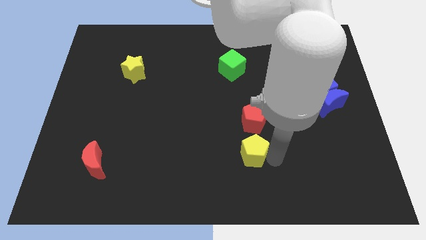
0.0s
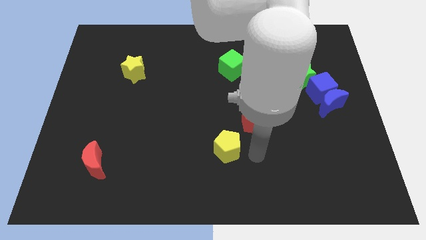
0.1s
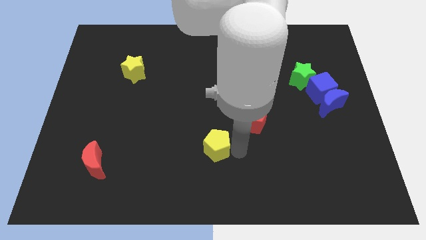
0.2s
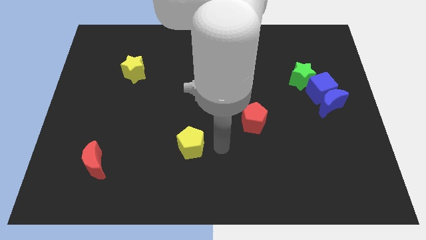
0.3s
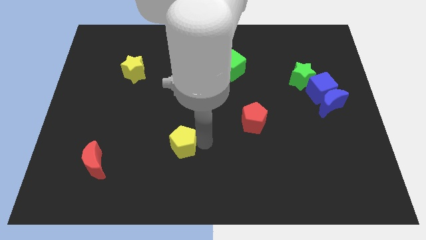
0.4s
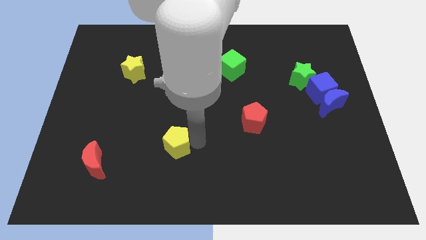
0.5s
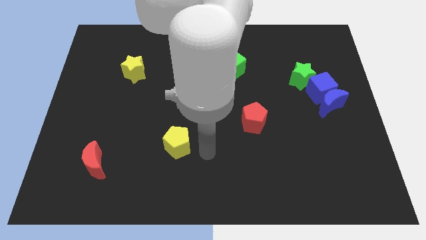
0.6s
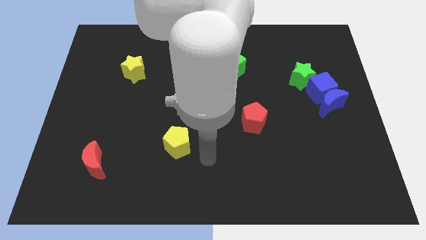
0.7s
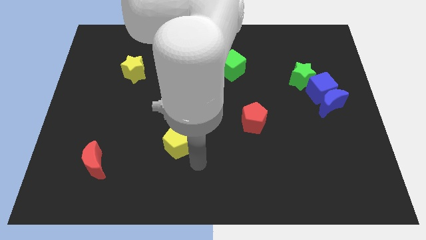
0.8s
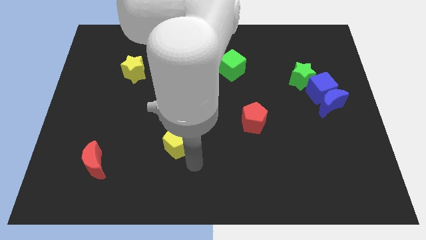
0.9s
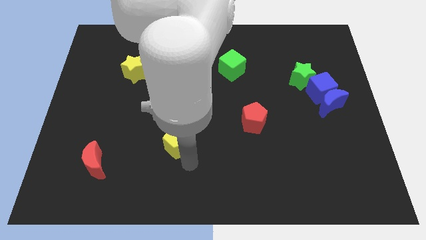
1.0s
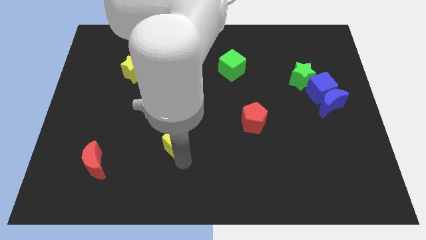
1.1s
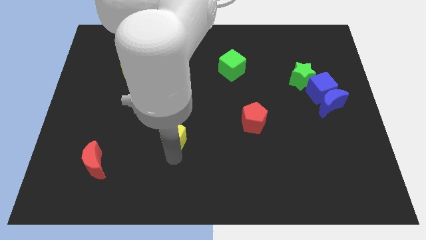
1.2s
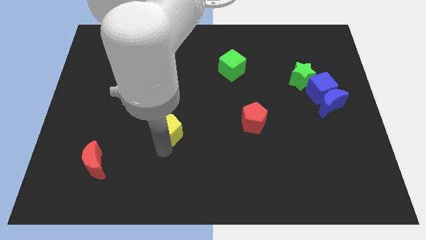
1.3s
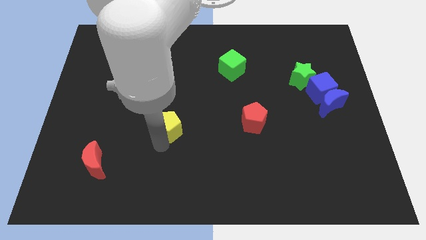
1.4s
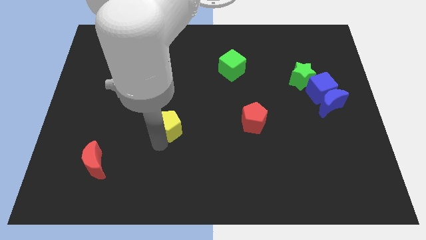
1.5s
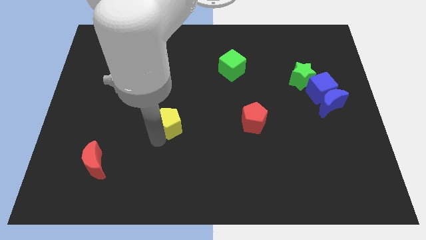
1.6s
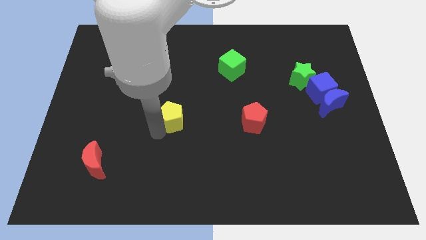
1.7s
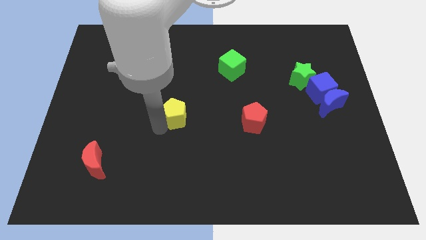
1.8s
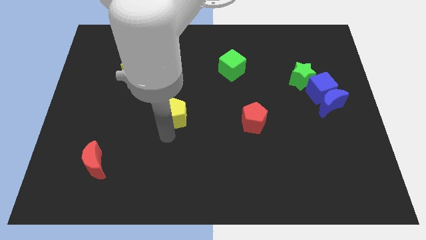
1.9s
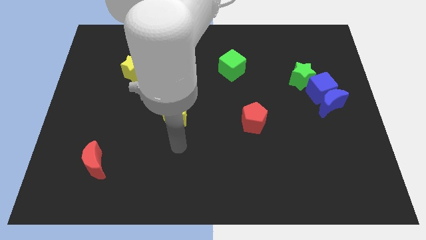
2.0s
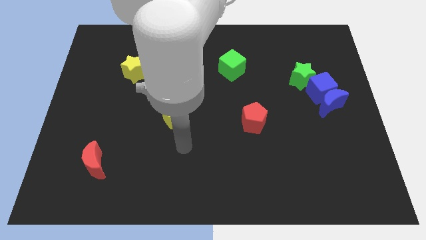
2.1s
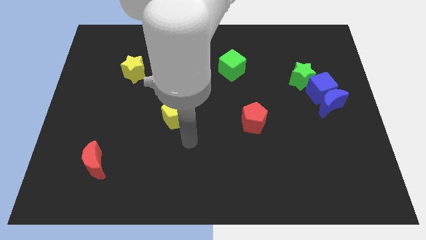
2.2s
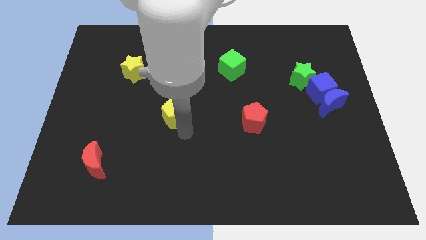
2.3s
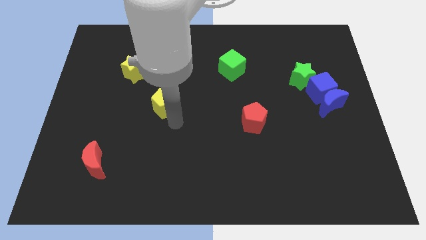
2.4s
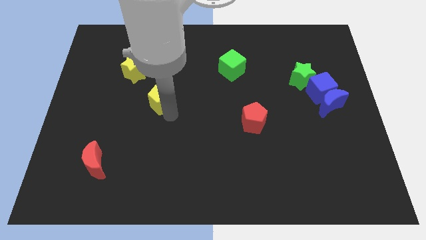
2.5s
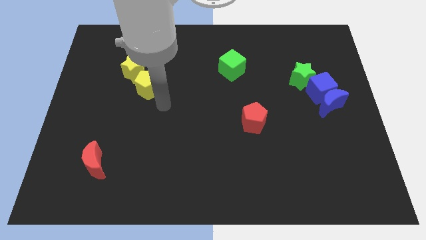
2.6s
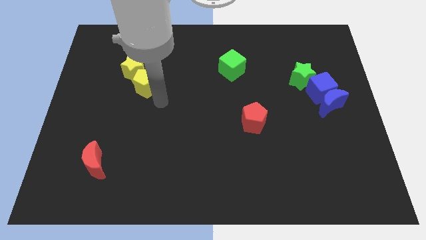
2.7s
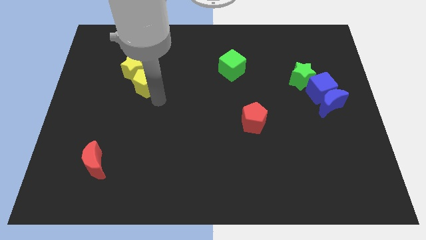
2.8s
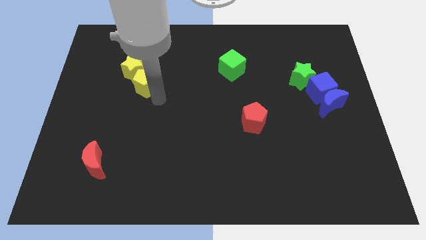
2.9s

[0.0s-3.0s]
push the yellow pentagon close to the yellow star

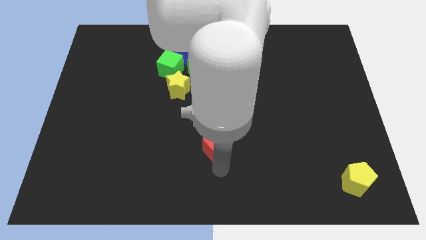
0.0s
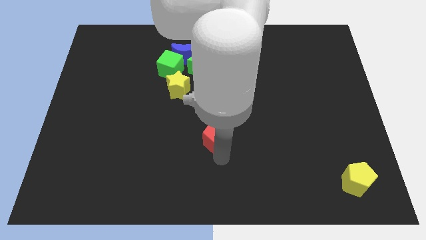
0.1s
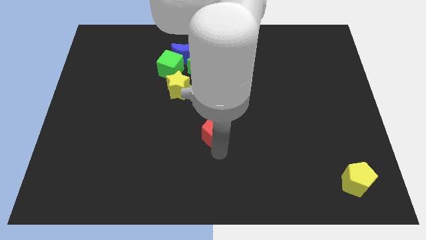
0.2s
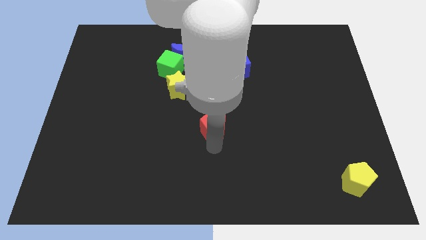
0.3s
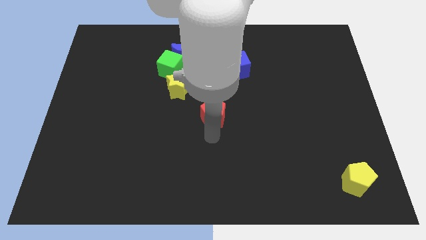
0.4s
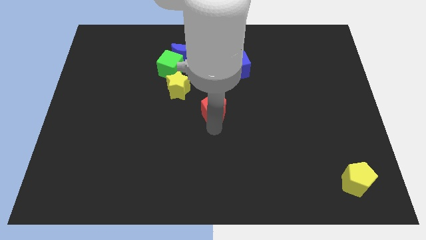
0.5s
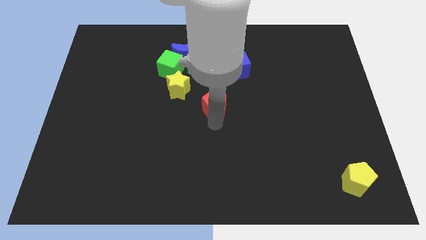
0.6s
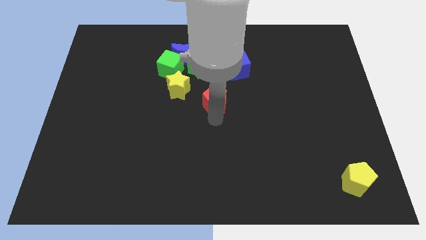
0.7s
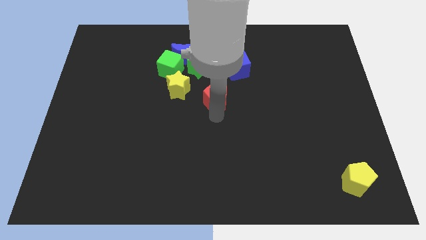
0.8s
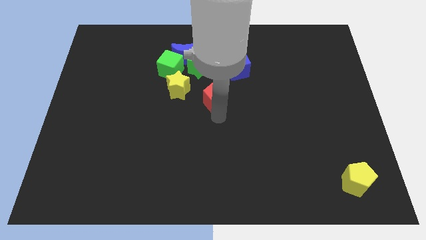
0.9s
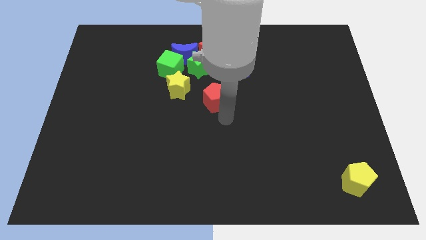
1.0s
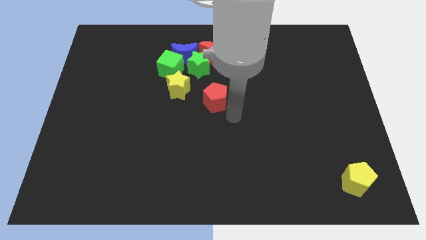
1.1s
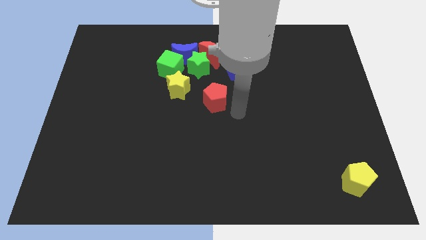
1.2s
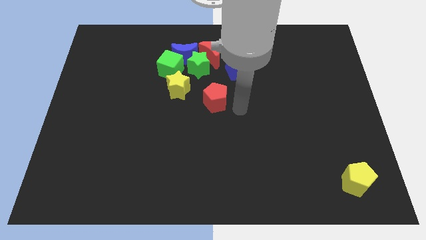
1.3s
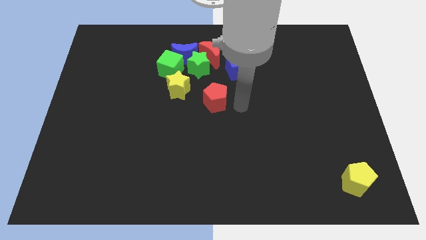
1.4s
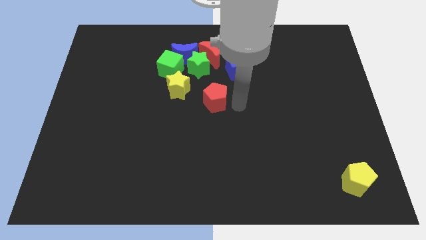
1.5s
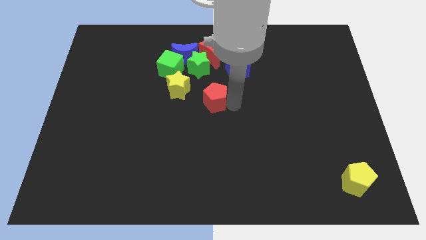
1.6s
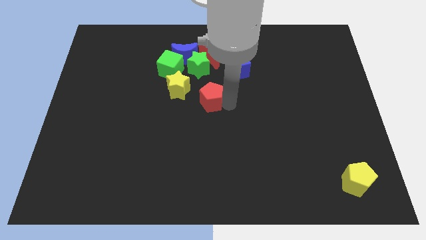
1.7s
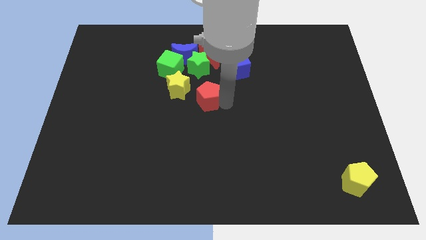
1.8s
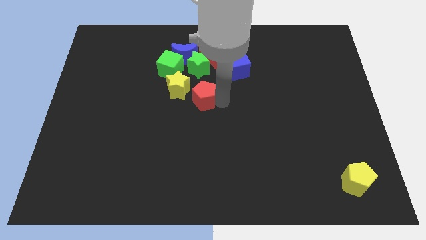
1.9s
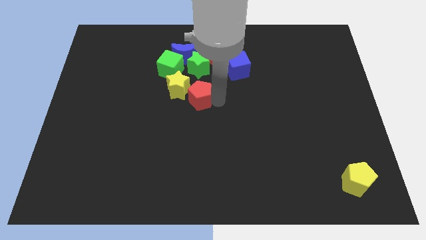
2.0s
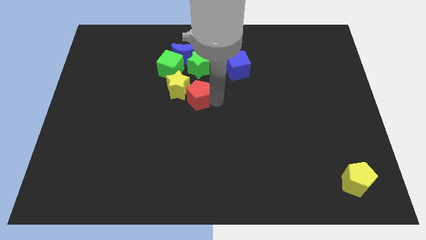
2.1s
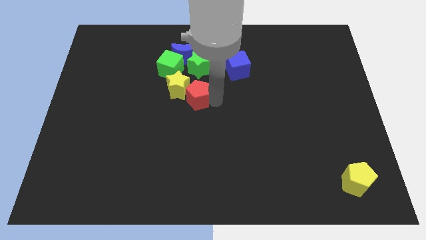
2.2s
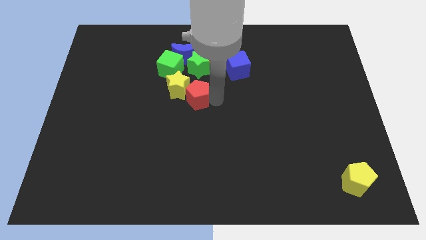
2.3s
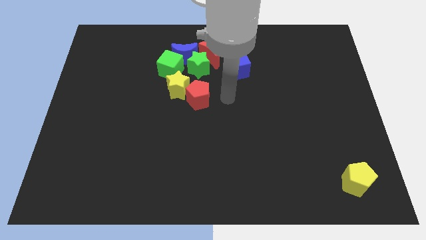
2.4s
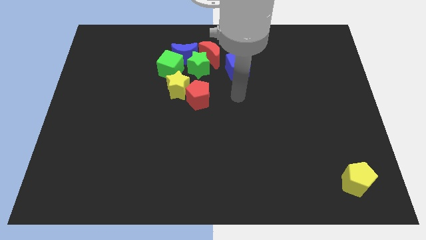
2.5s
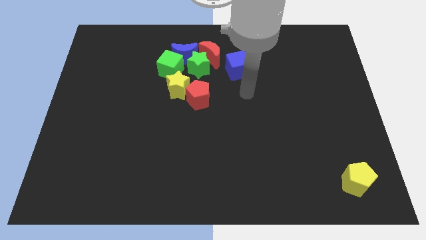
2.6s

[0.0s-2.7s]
place the red pentagon at the bottom right side of yellow star

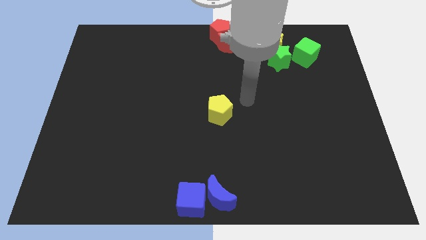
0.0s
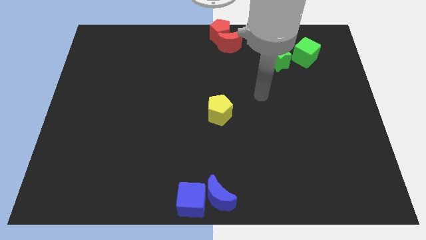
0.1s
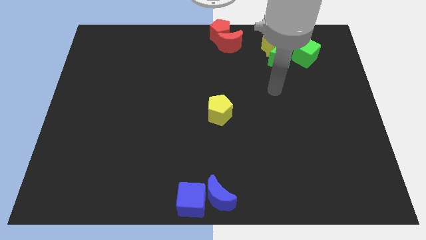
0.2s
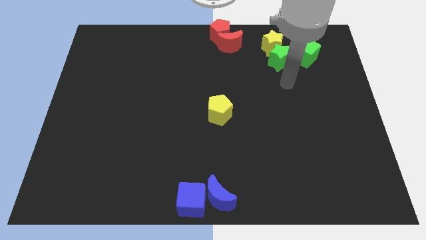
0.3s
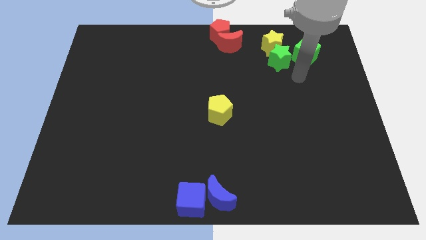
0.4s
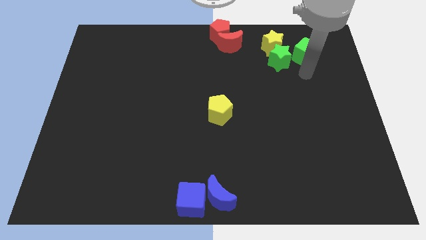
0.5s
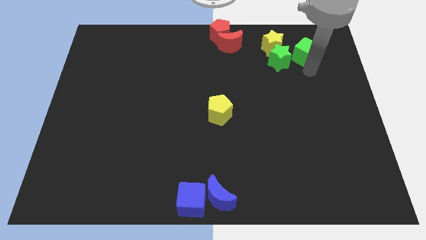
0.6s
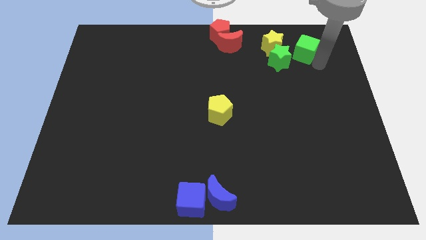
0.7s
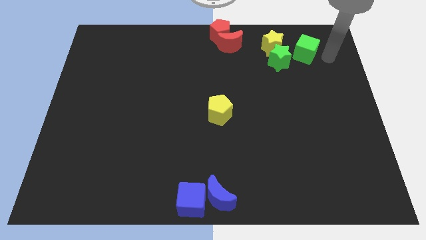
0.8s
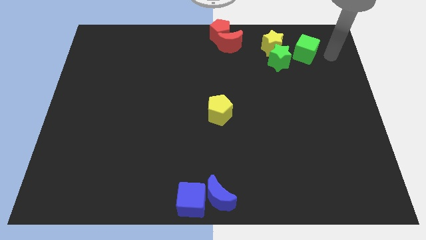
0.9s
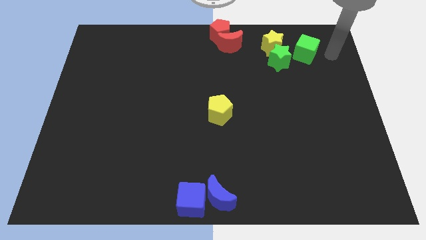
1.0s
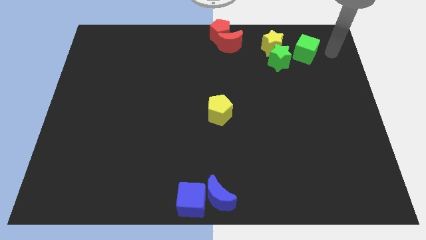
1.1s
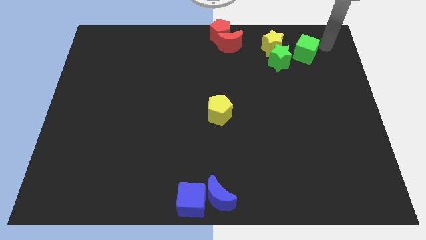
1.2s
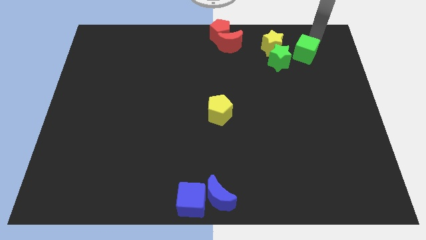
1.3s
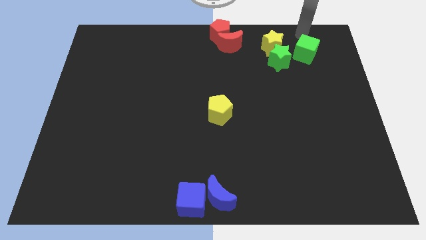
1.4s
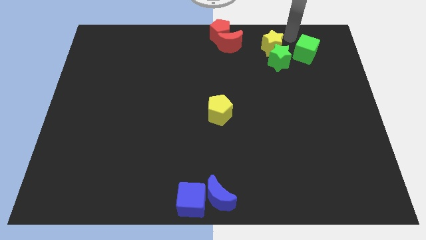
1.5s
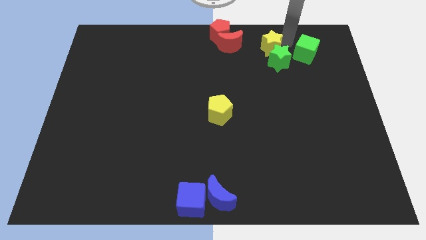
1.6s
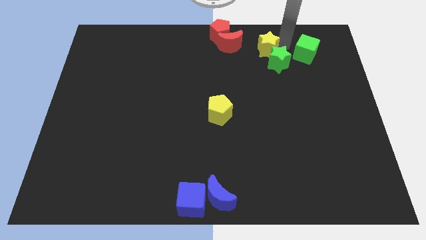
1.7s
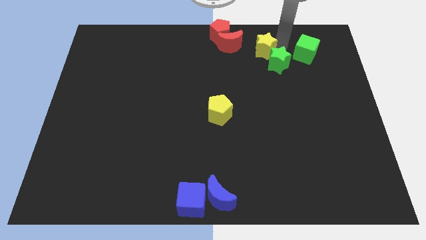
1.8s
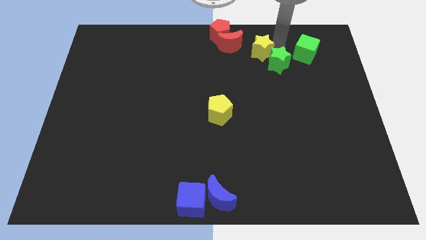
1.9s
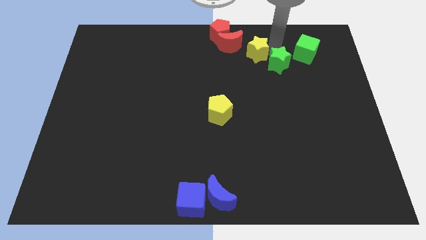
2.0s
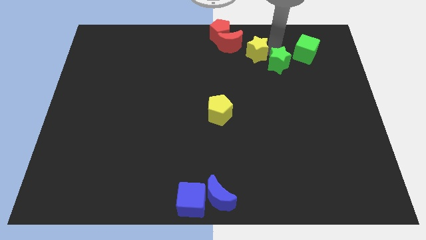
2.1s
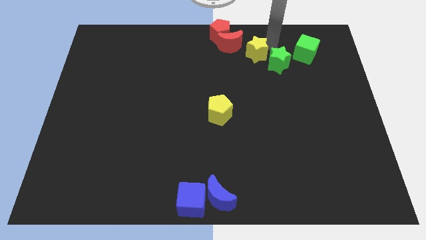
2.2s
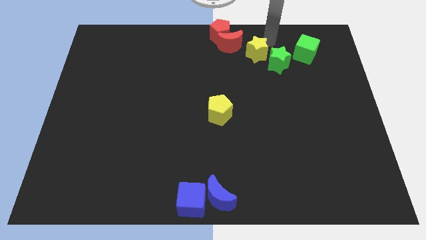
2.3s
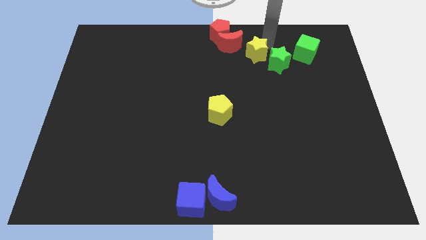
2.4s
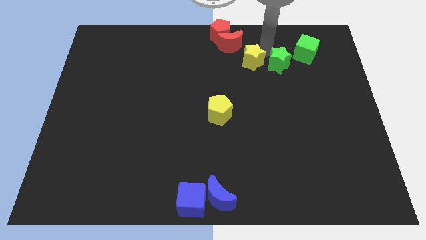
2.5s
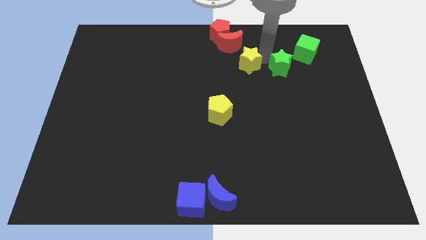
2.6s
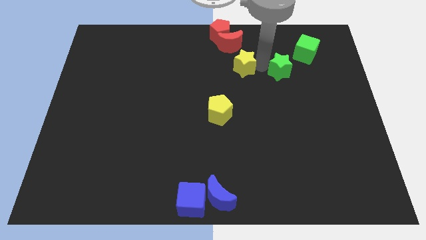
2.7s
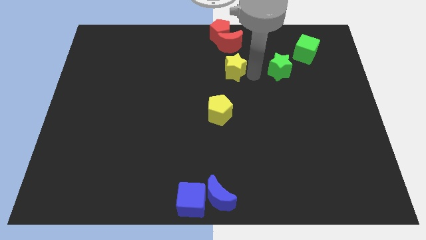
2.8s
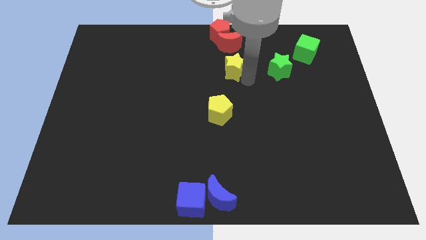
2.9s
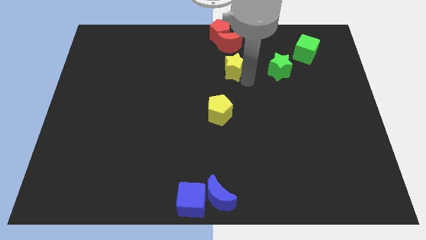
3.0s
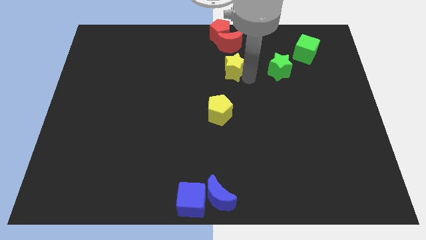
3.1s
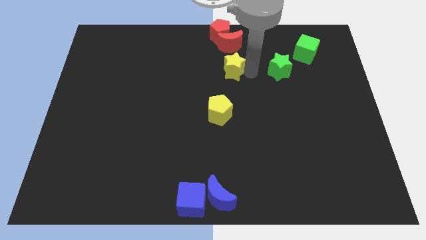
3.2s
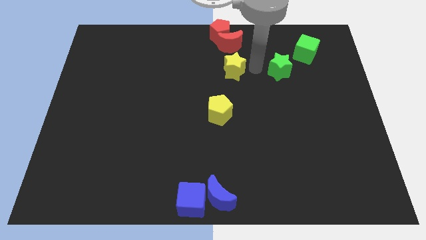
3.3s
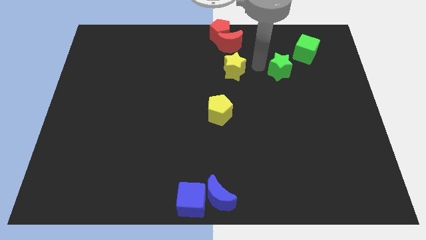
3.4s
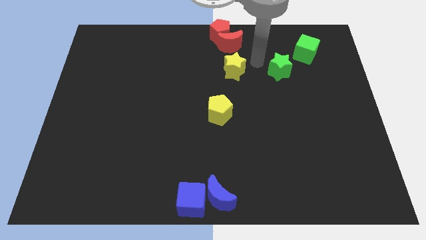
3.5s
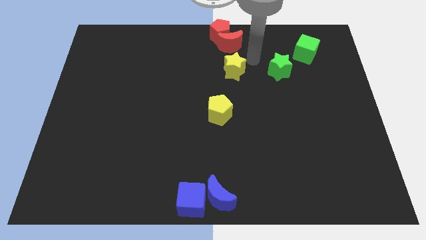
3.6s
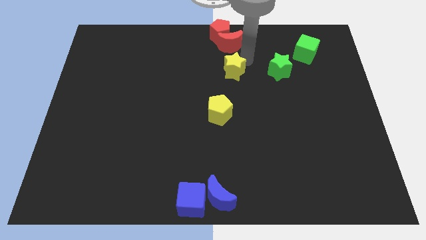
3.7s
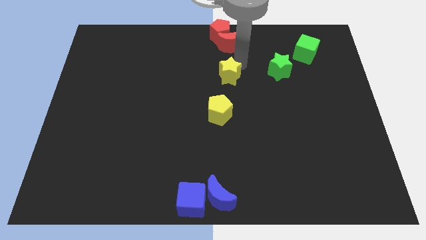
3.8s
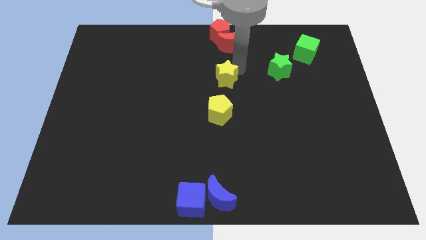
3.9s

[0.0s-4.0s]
move the yellow star away from the top side of the green star
